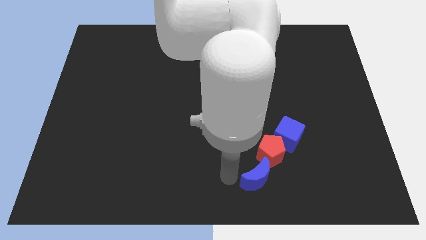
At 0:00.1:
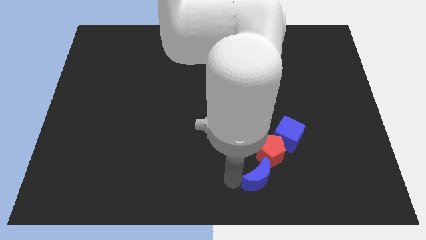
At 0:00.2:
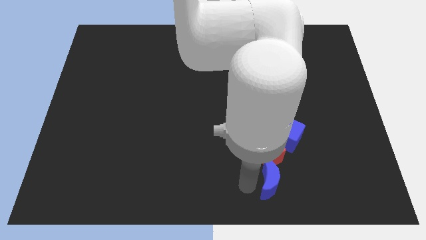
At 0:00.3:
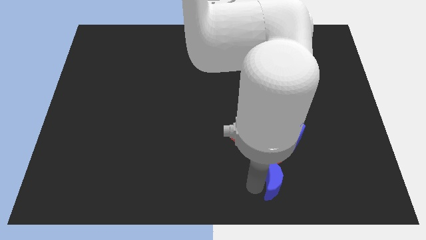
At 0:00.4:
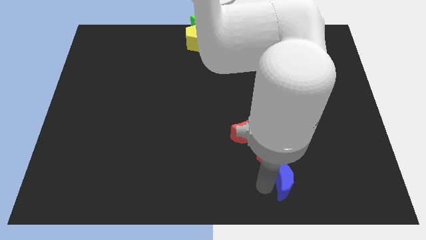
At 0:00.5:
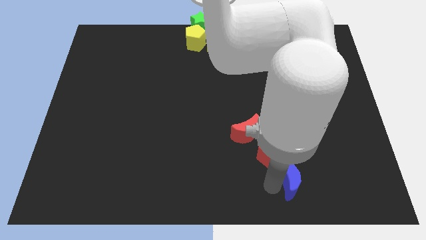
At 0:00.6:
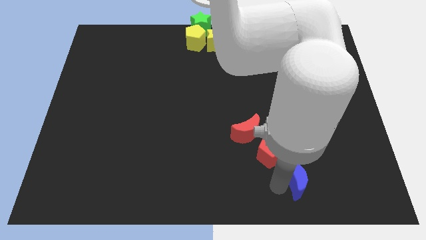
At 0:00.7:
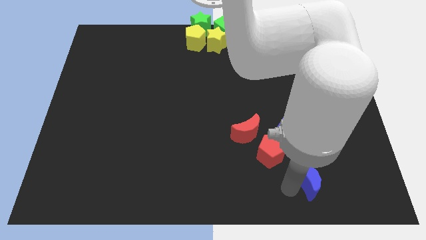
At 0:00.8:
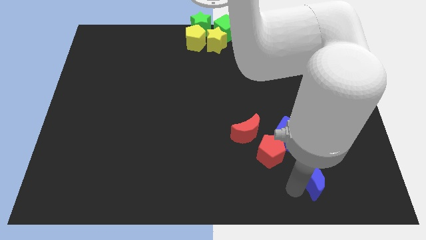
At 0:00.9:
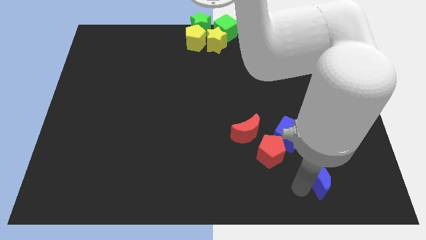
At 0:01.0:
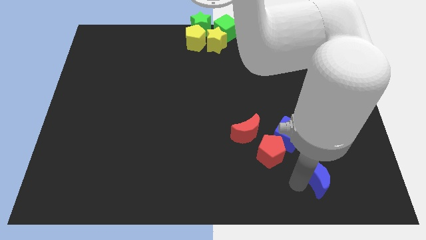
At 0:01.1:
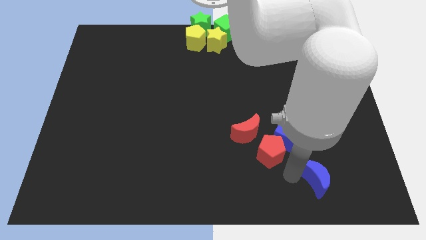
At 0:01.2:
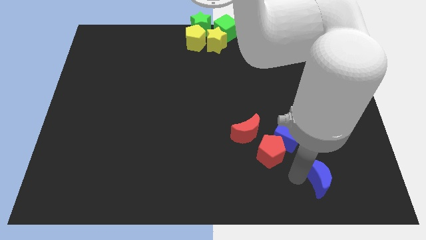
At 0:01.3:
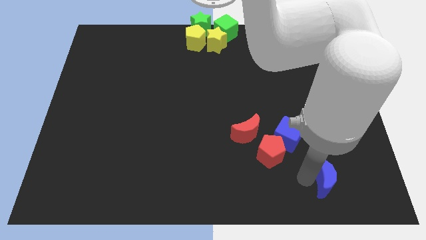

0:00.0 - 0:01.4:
move the blue moon towards the right side of the board

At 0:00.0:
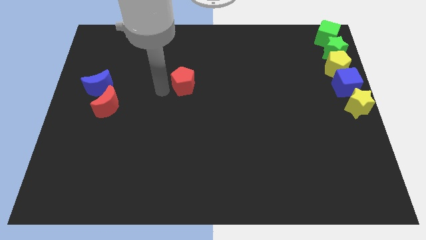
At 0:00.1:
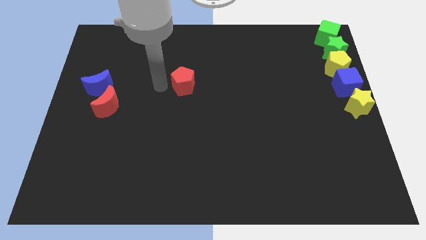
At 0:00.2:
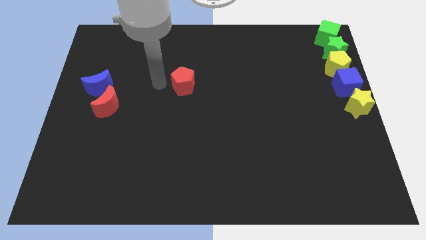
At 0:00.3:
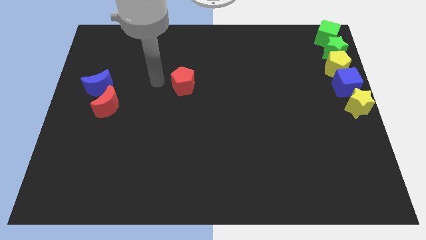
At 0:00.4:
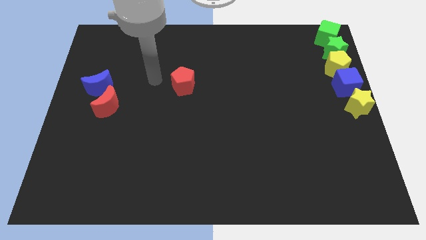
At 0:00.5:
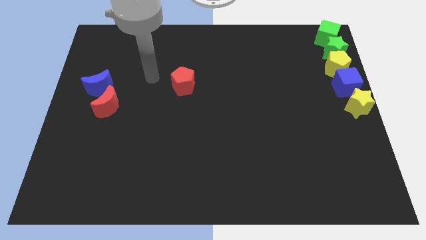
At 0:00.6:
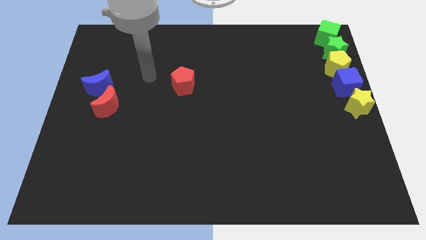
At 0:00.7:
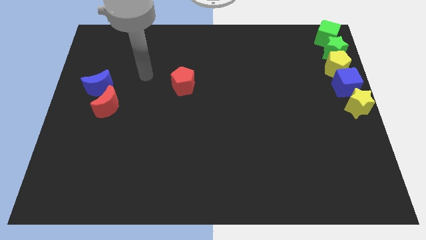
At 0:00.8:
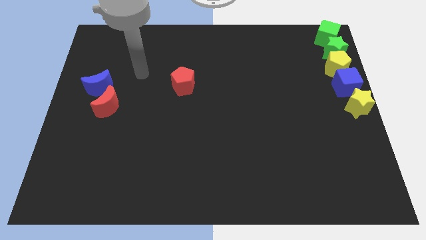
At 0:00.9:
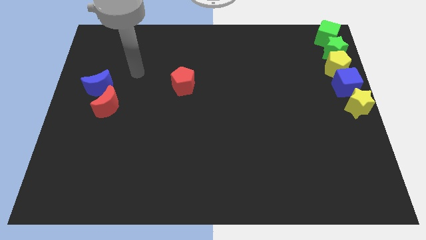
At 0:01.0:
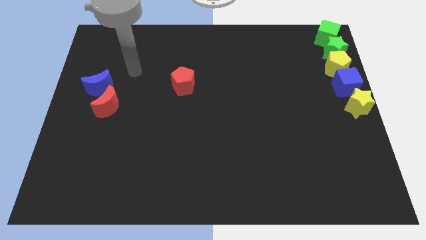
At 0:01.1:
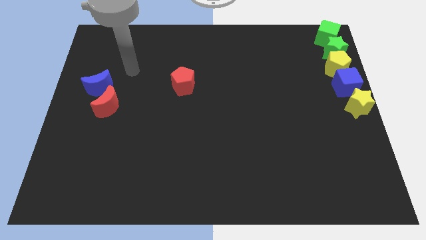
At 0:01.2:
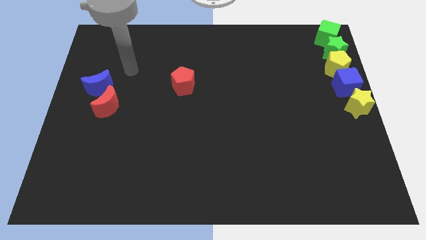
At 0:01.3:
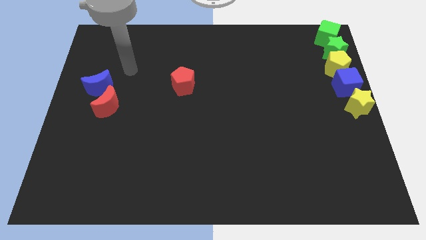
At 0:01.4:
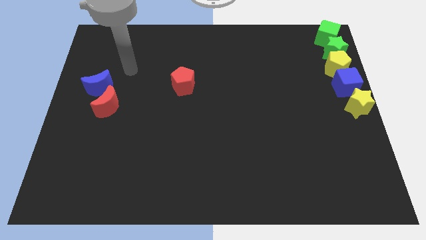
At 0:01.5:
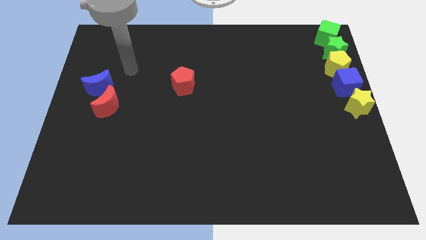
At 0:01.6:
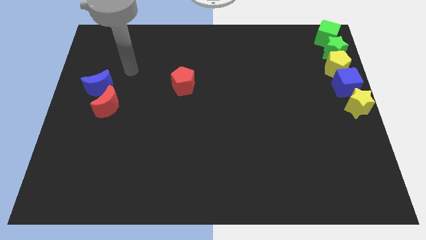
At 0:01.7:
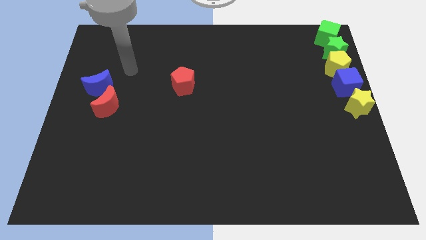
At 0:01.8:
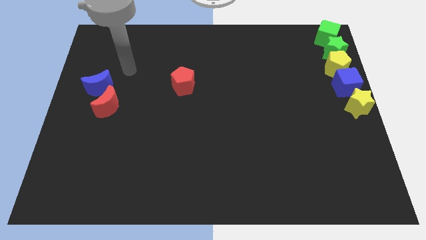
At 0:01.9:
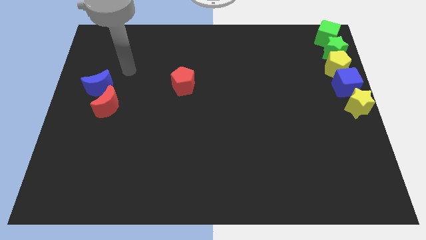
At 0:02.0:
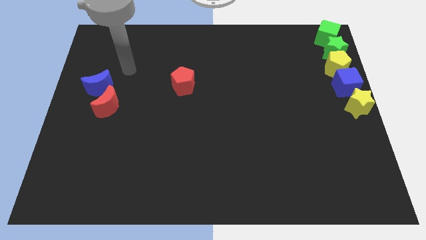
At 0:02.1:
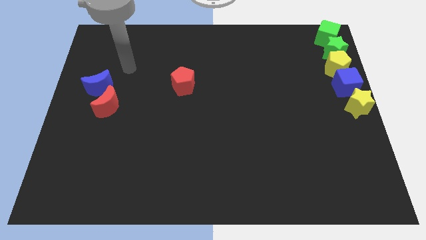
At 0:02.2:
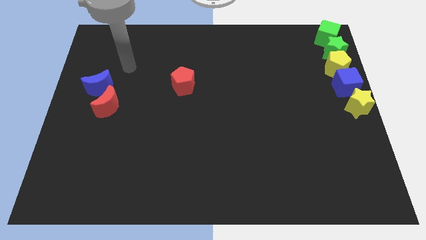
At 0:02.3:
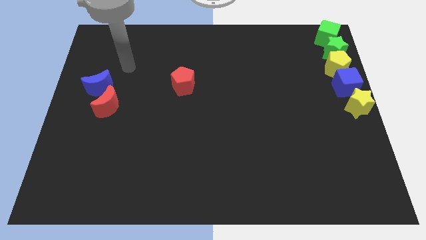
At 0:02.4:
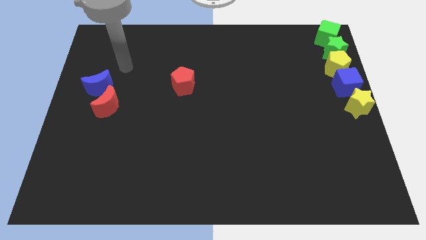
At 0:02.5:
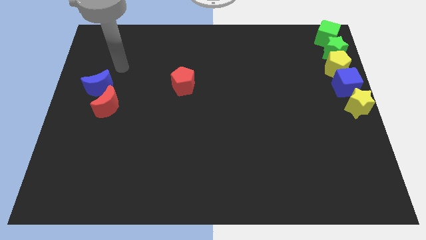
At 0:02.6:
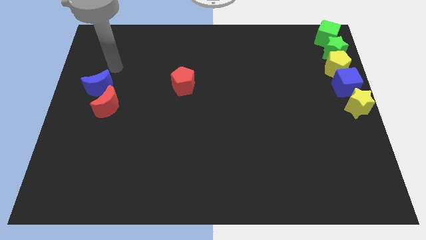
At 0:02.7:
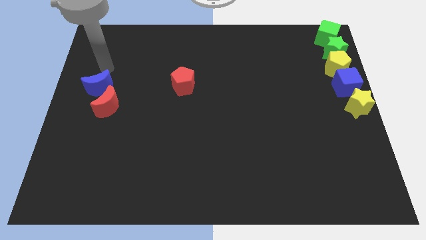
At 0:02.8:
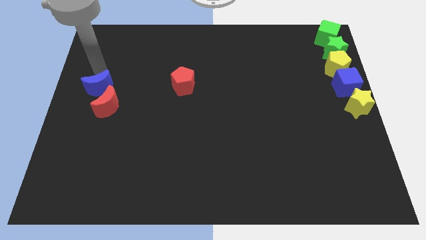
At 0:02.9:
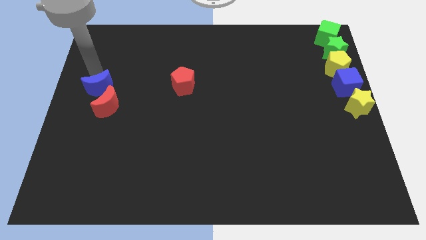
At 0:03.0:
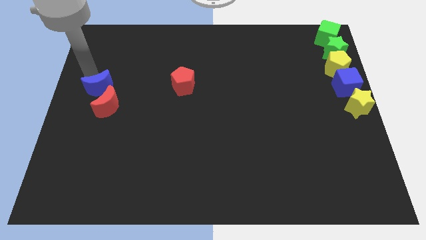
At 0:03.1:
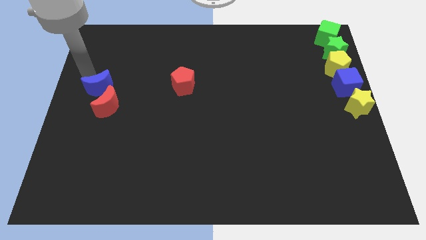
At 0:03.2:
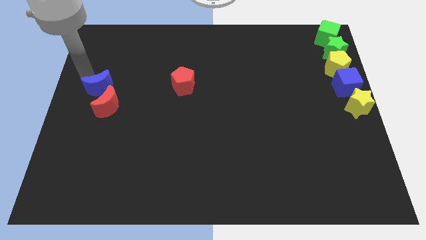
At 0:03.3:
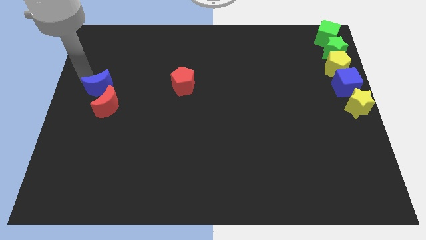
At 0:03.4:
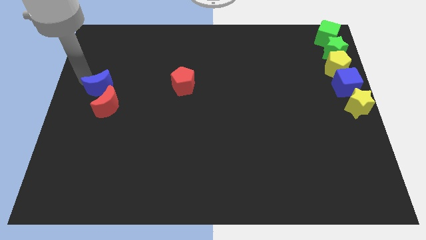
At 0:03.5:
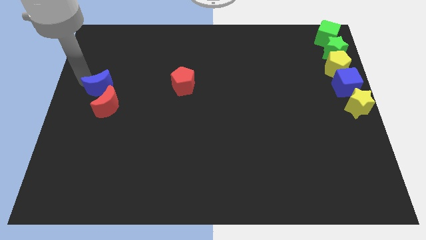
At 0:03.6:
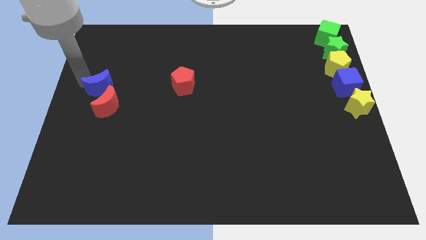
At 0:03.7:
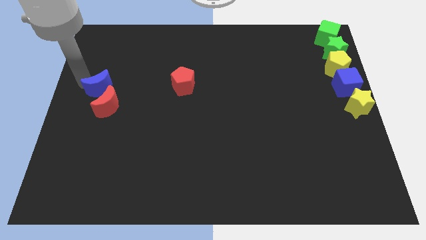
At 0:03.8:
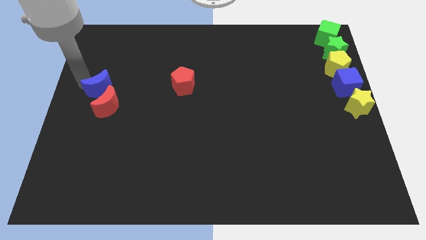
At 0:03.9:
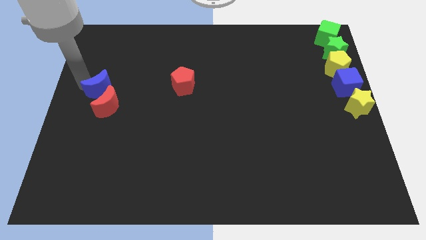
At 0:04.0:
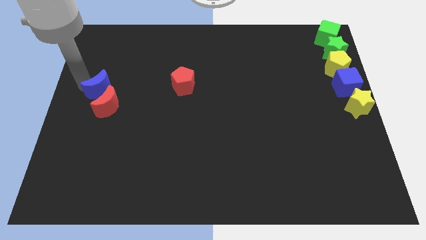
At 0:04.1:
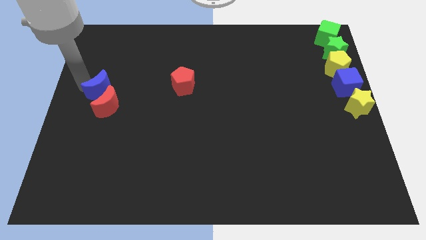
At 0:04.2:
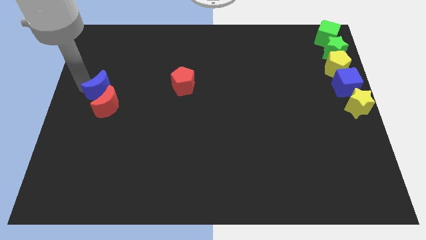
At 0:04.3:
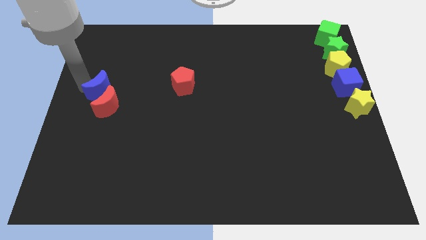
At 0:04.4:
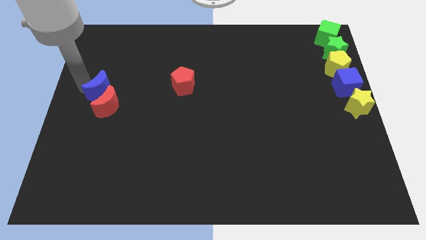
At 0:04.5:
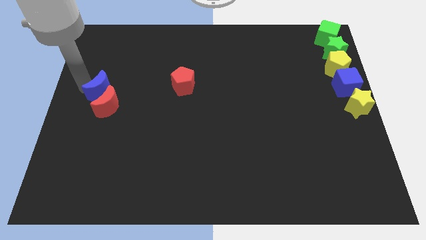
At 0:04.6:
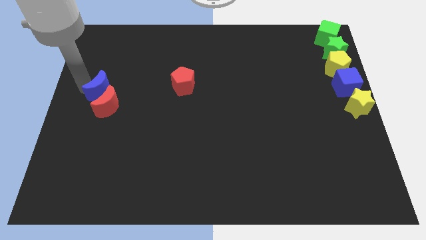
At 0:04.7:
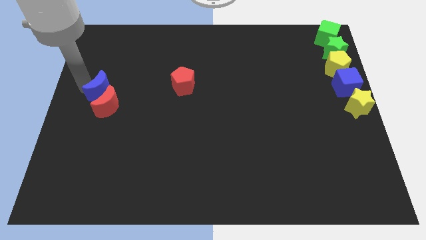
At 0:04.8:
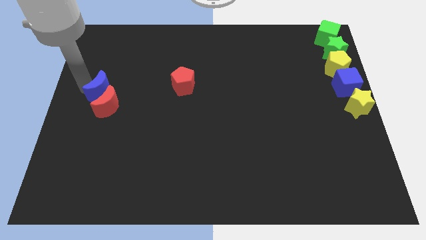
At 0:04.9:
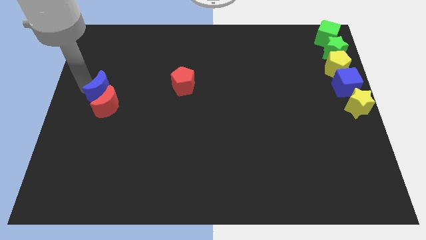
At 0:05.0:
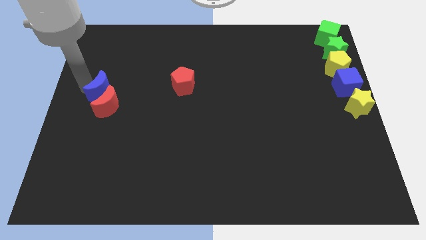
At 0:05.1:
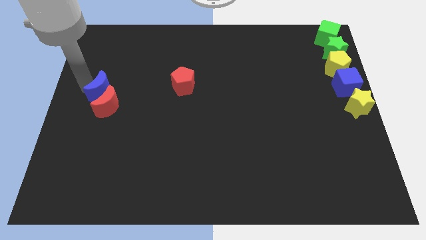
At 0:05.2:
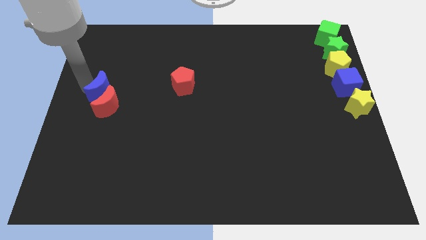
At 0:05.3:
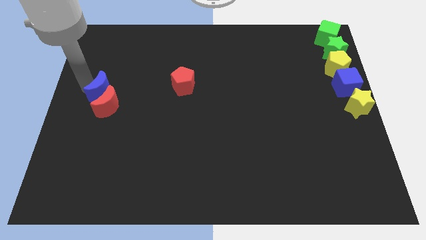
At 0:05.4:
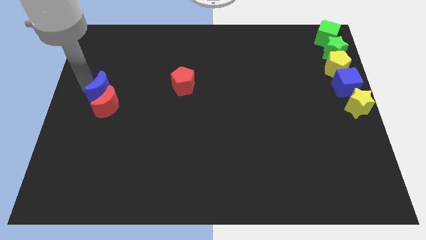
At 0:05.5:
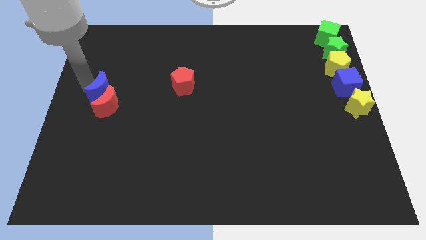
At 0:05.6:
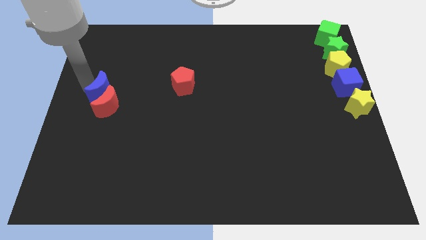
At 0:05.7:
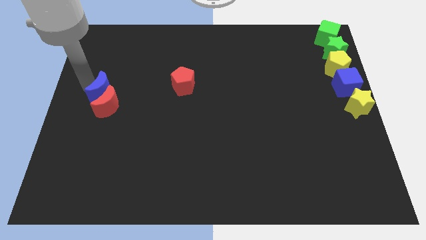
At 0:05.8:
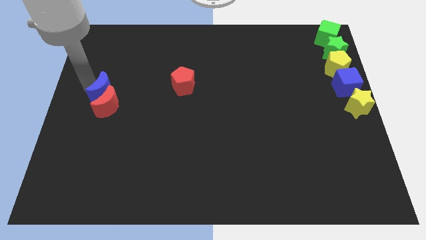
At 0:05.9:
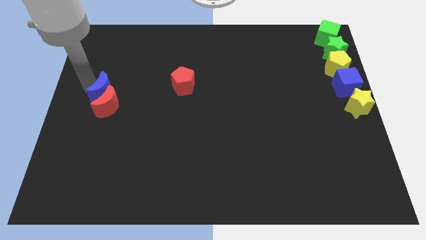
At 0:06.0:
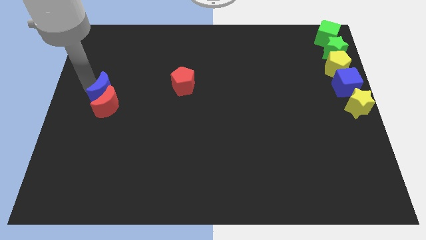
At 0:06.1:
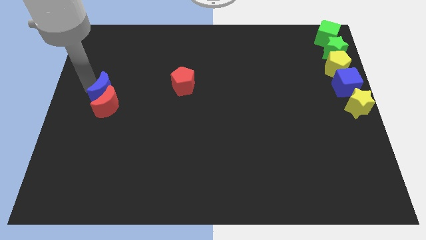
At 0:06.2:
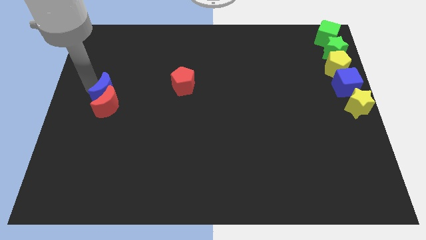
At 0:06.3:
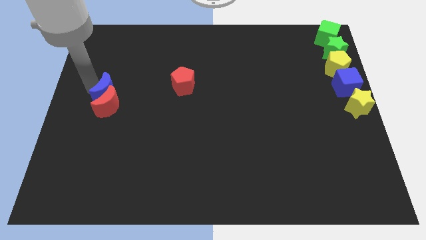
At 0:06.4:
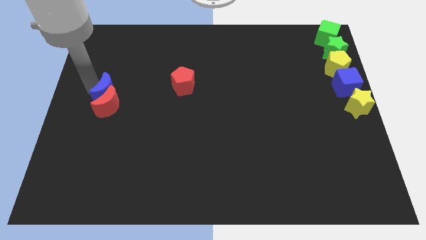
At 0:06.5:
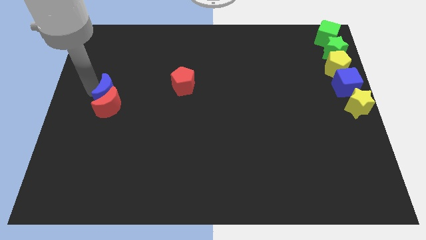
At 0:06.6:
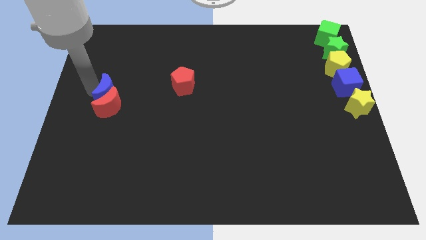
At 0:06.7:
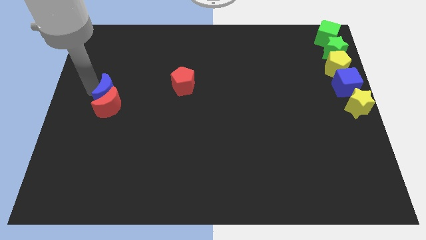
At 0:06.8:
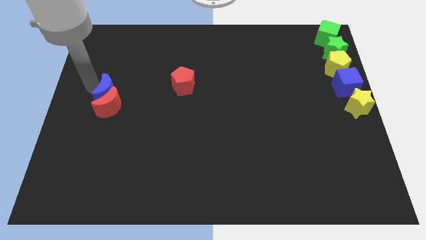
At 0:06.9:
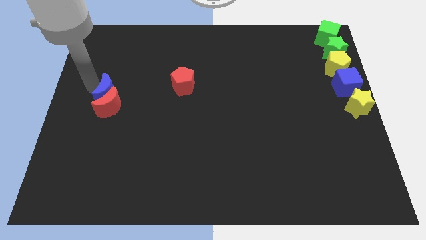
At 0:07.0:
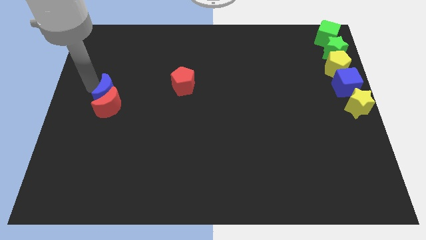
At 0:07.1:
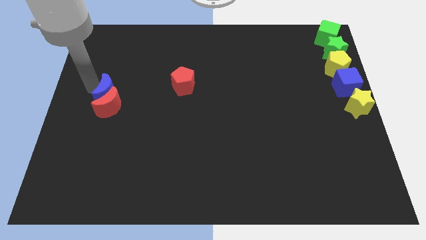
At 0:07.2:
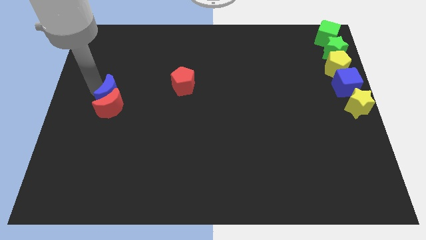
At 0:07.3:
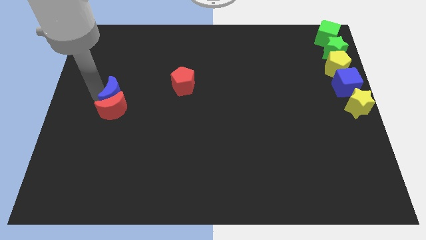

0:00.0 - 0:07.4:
move the blue crescent above the red crescent

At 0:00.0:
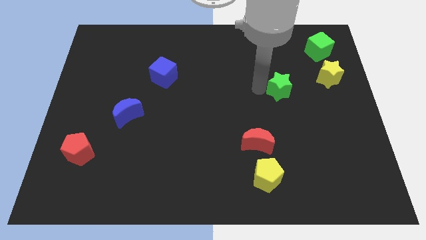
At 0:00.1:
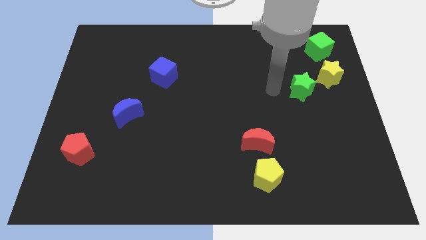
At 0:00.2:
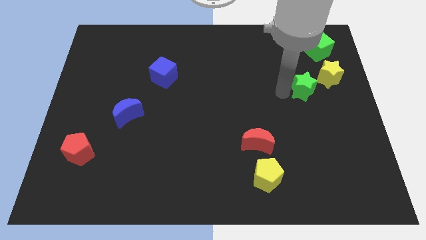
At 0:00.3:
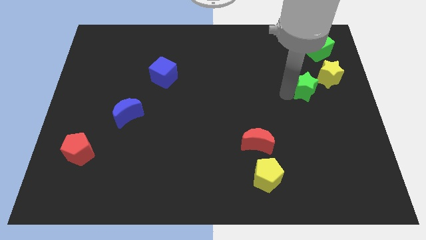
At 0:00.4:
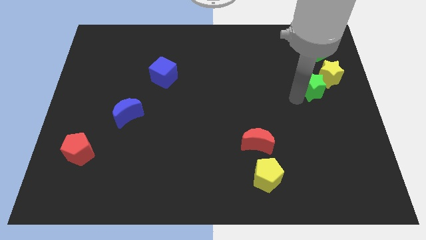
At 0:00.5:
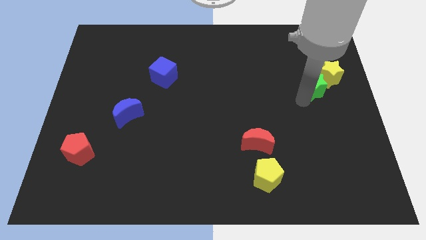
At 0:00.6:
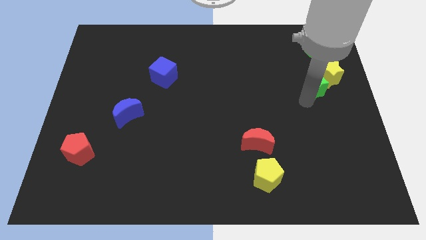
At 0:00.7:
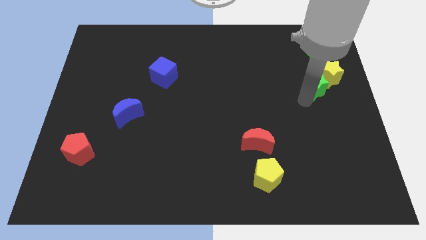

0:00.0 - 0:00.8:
push the green star into the yellow star
